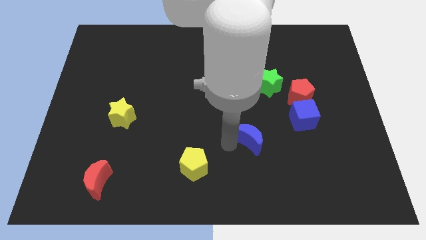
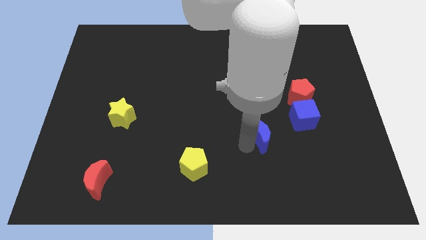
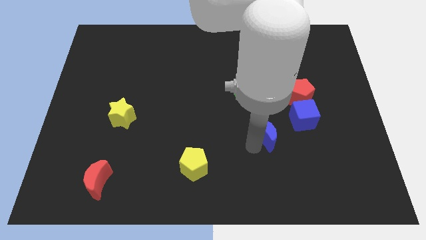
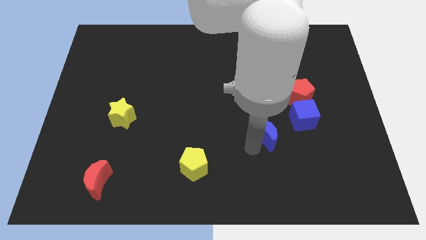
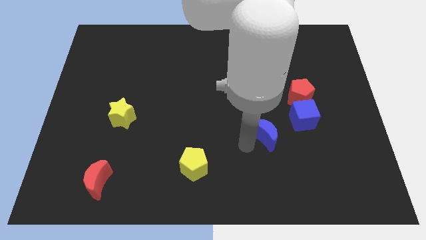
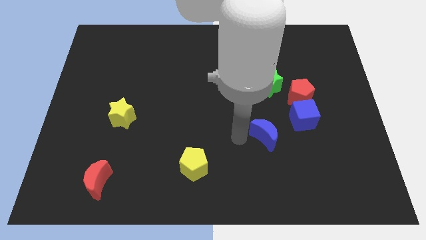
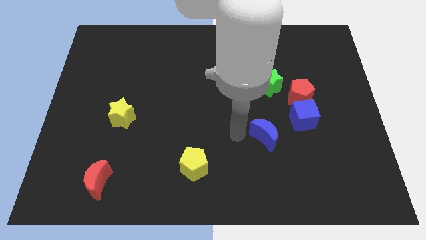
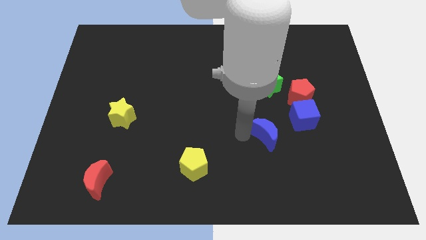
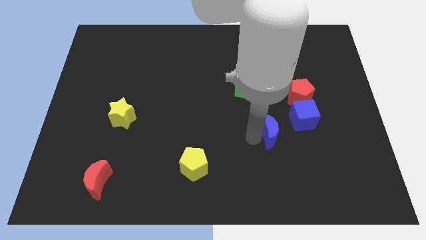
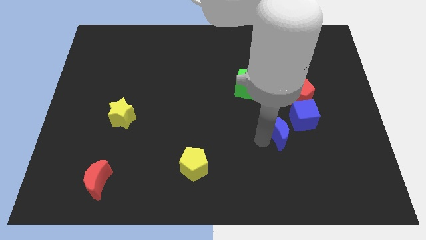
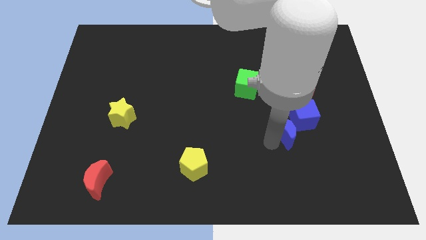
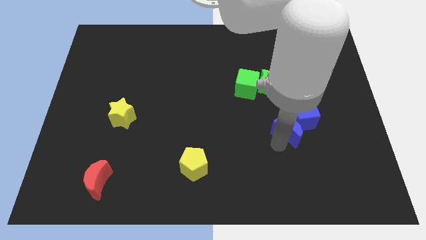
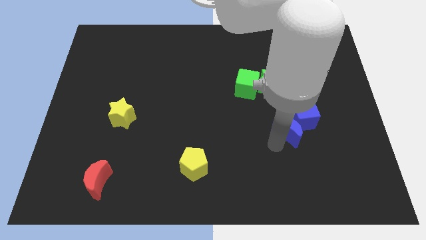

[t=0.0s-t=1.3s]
move the blue crescent into the blue cube

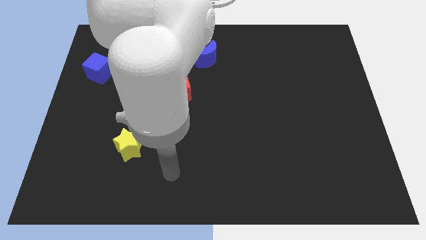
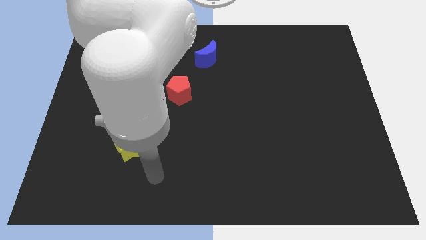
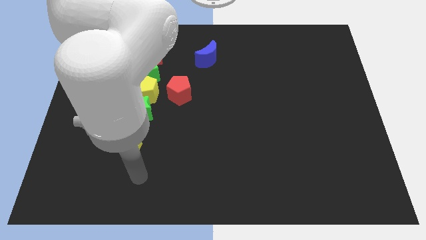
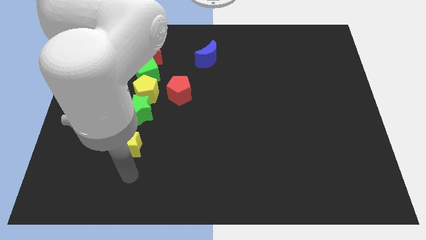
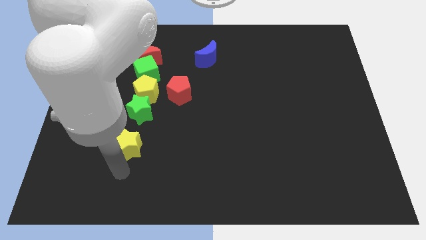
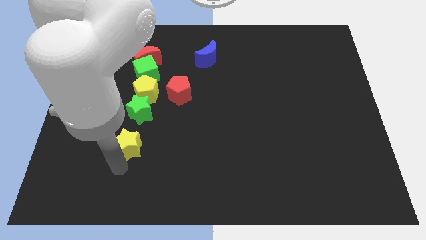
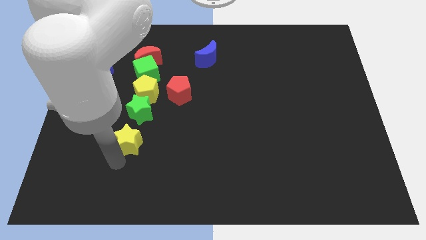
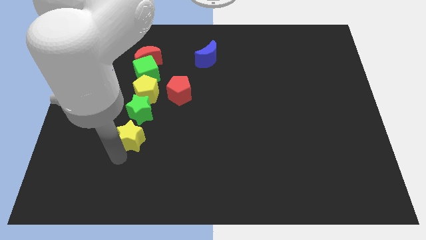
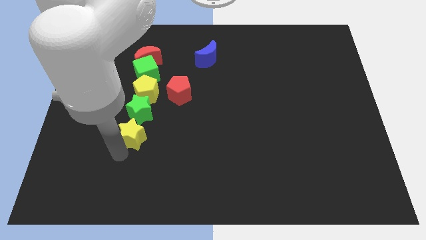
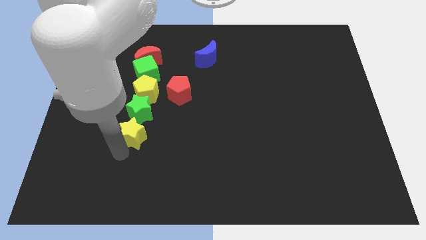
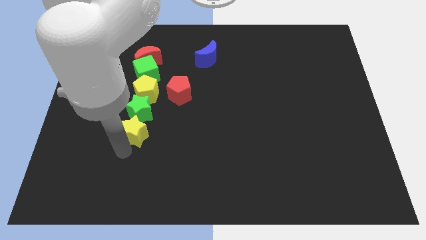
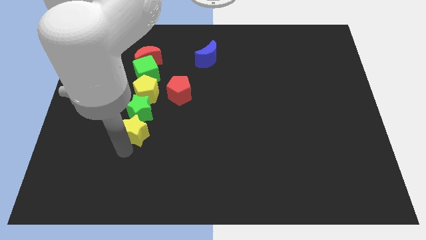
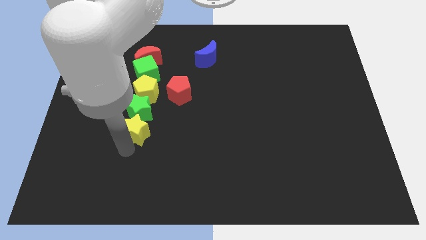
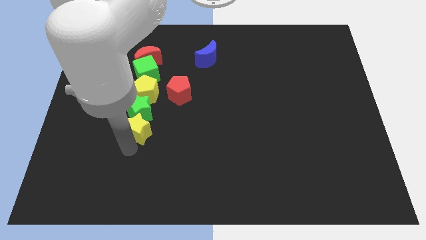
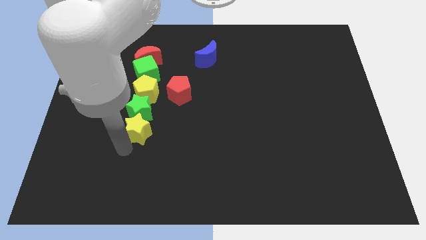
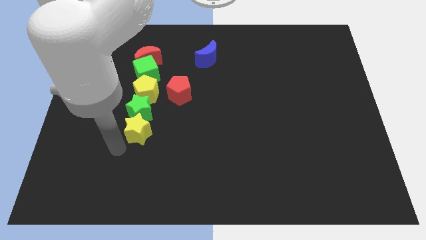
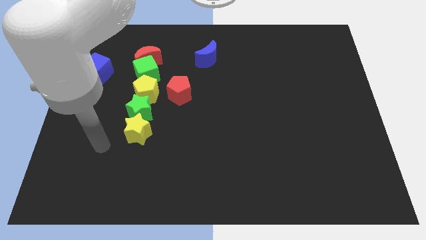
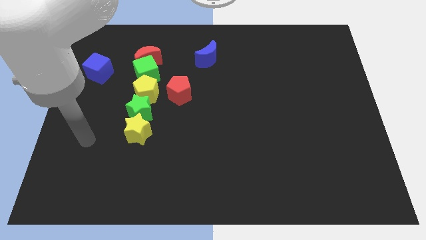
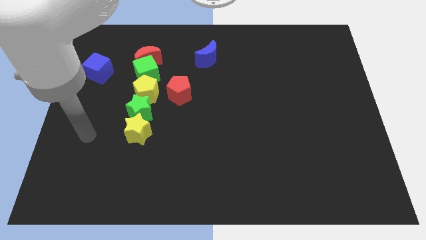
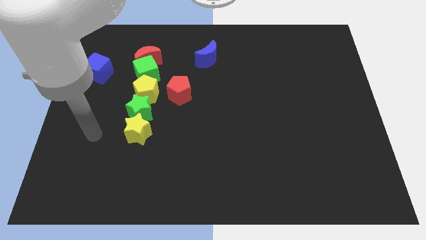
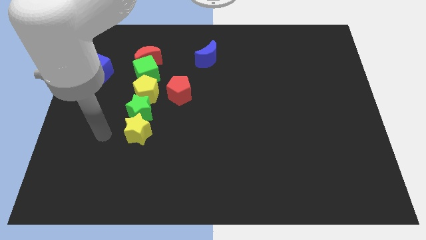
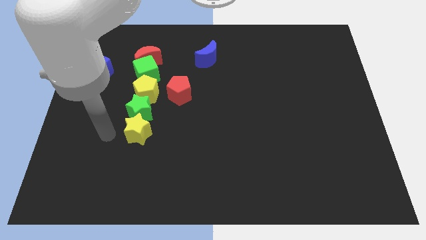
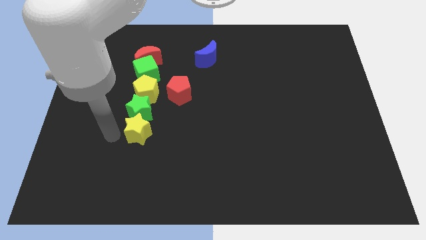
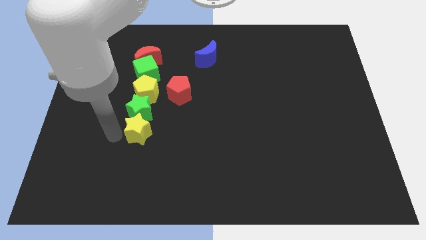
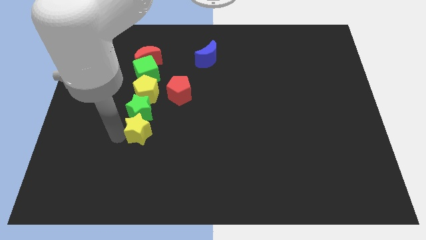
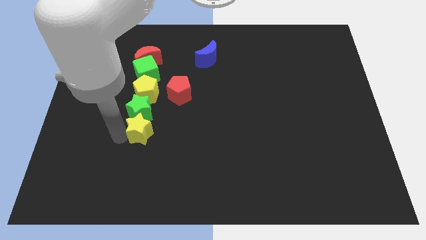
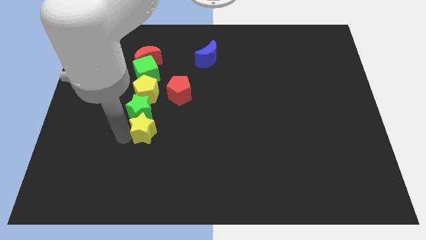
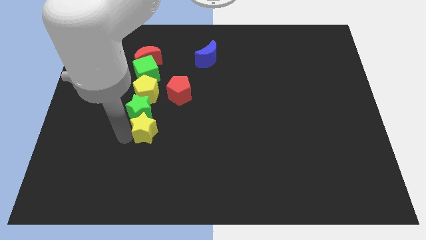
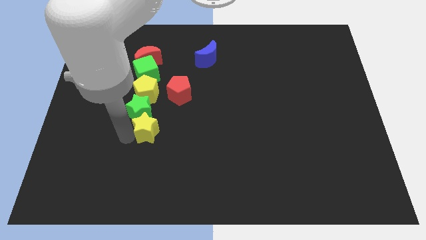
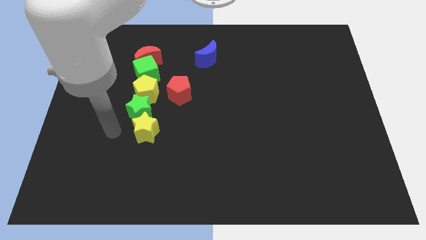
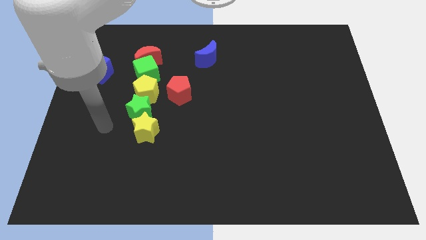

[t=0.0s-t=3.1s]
move yellow star to the bottom right of green star

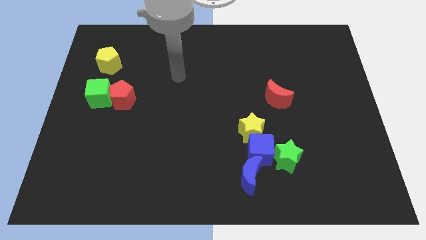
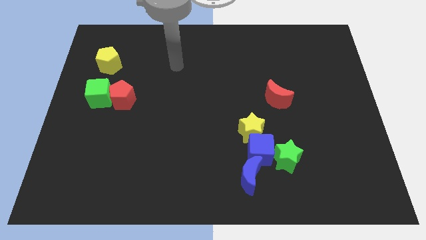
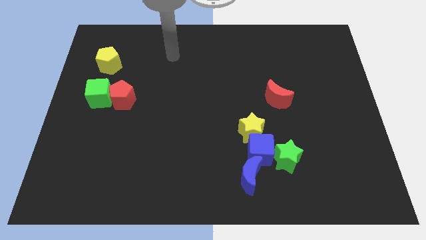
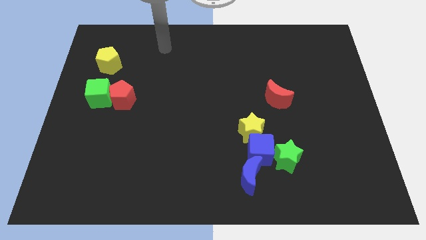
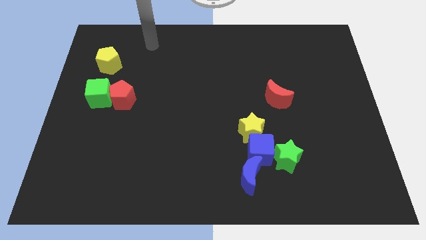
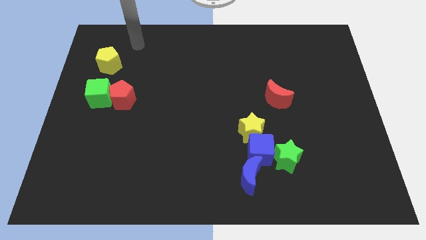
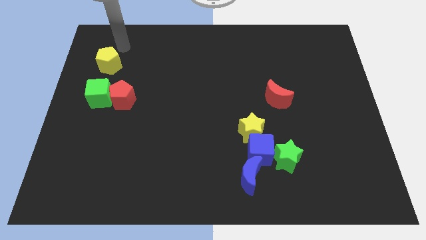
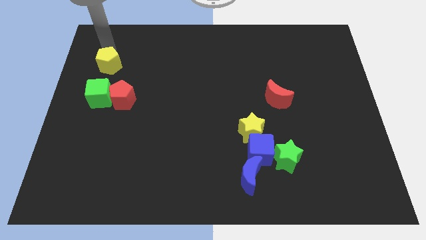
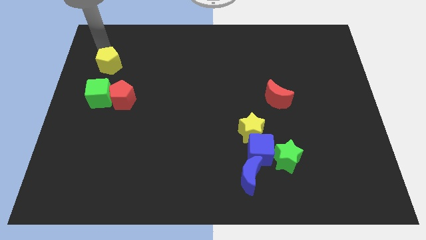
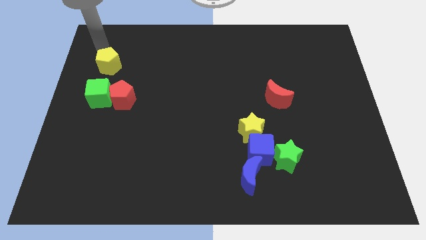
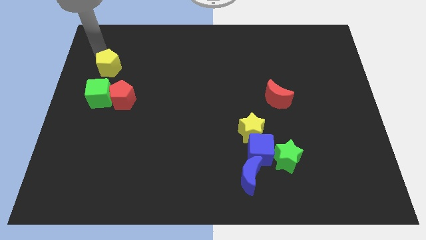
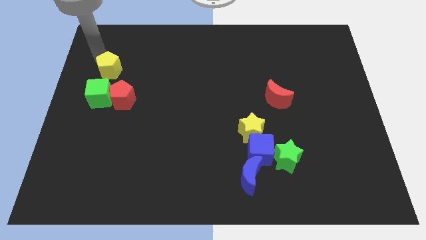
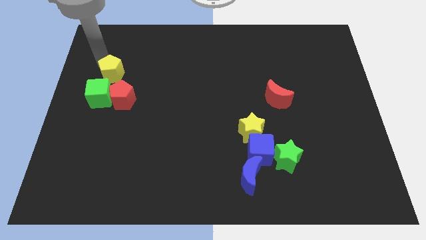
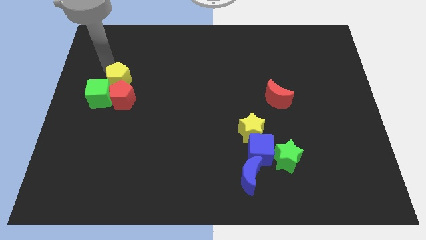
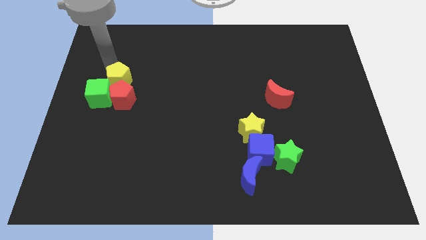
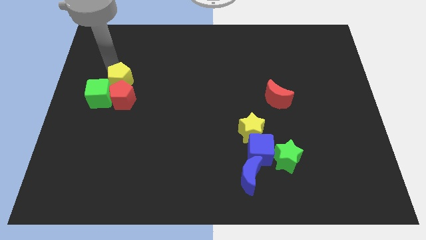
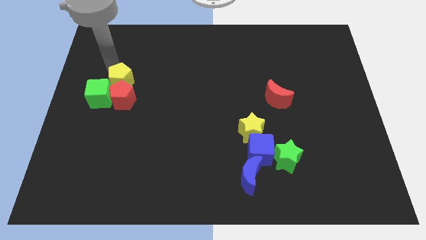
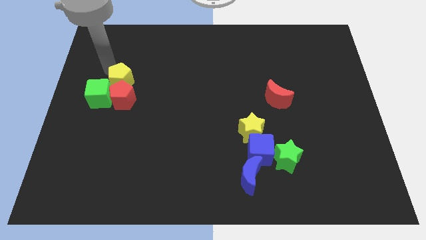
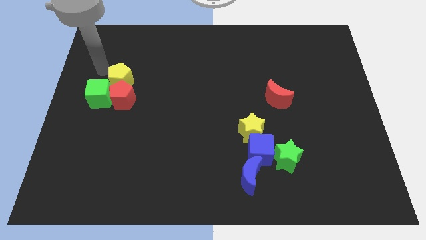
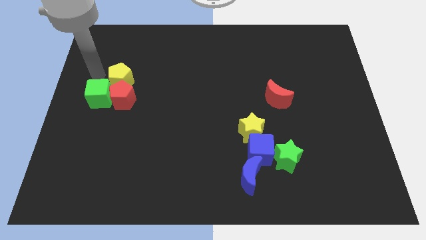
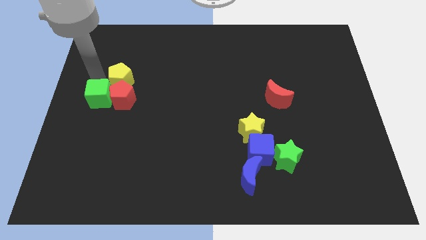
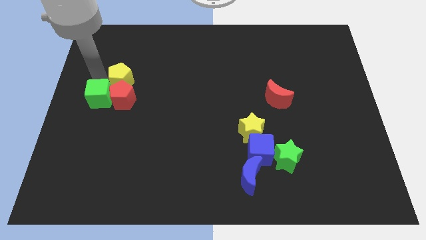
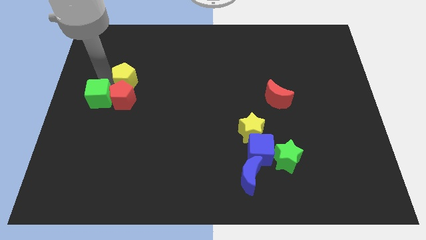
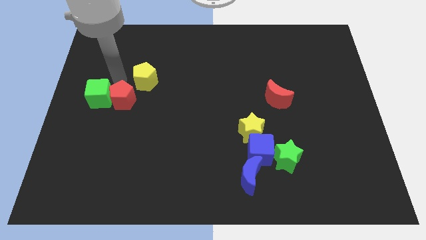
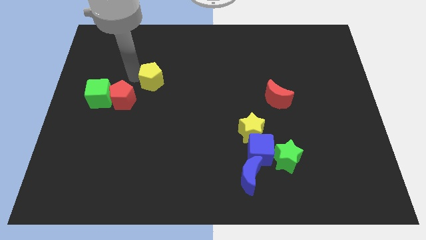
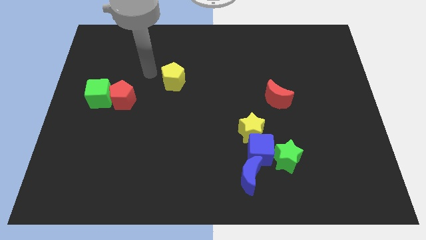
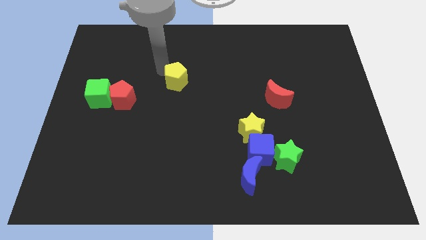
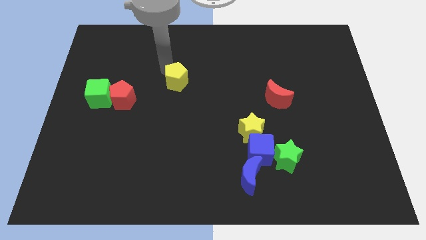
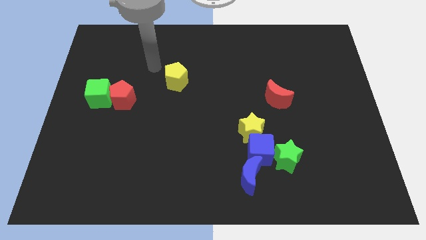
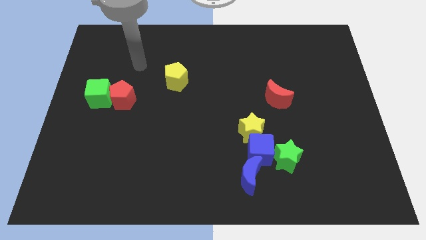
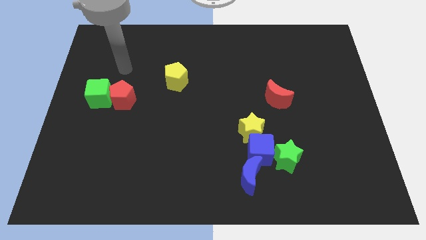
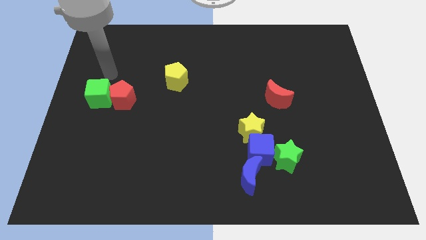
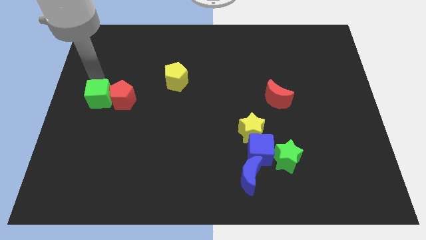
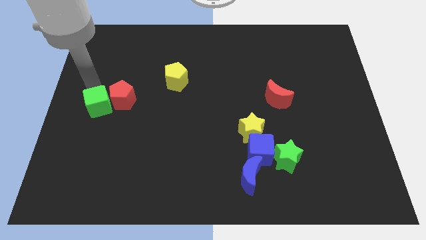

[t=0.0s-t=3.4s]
move the yellow pentagon diagonally to the right top of the red pentagon

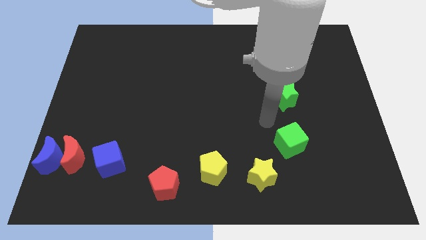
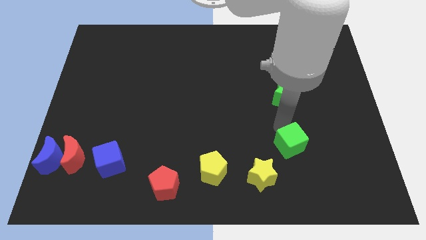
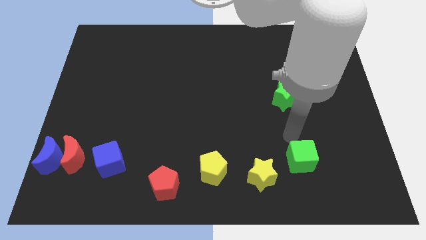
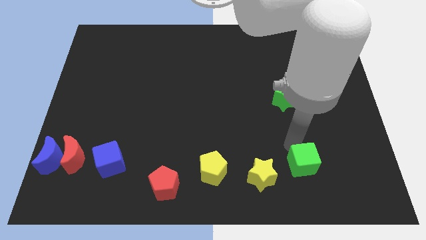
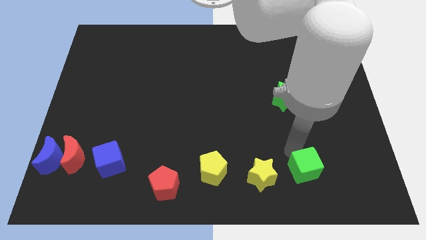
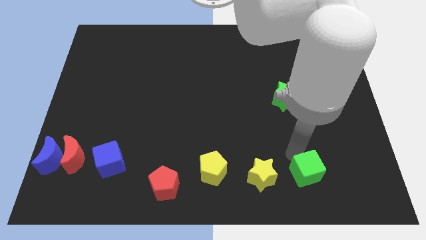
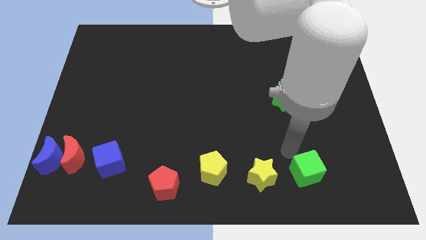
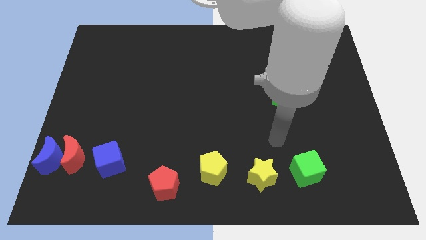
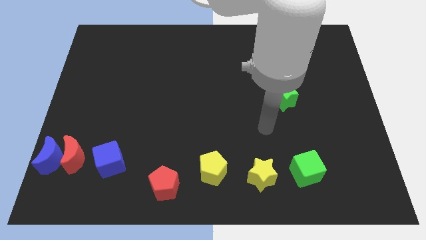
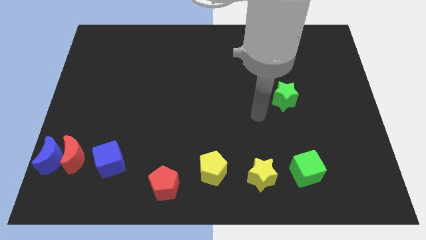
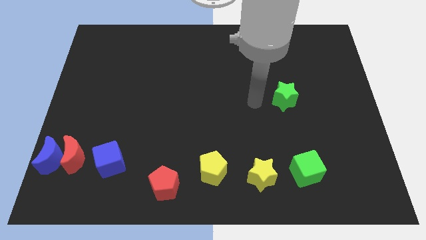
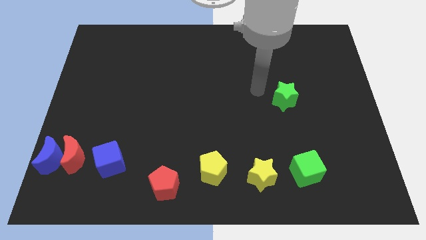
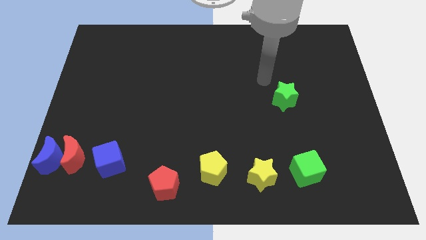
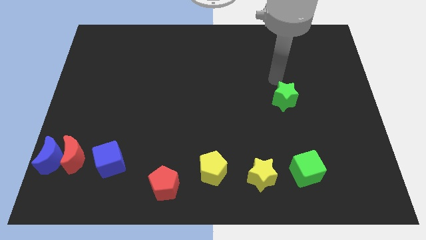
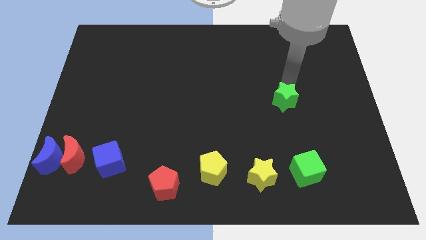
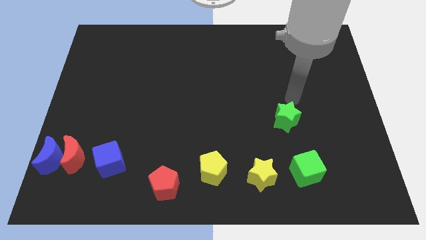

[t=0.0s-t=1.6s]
push the green cube right to the yellow star

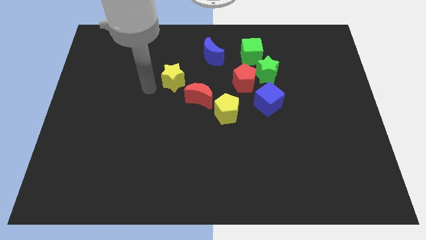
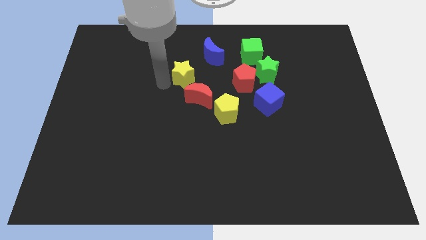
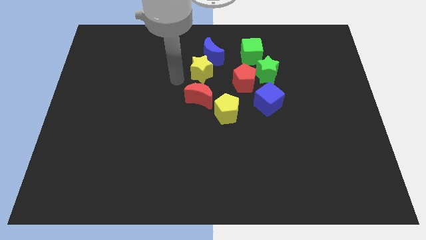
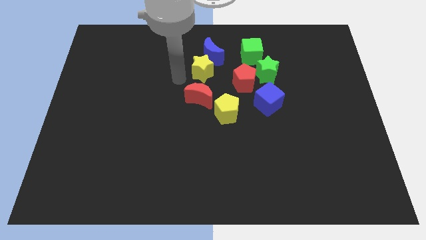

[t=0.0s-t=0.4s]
move the yellow star below the blue moon
